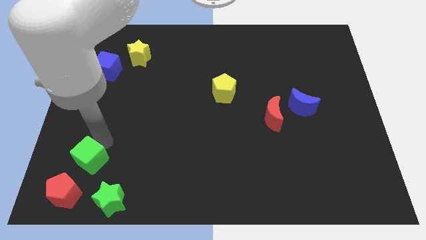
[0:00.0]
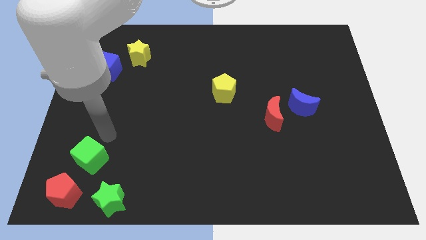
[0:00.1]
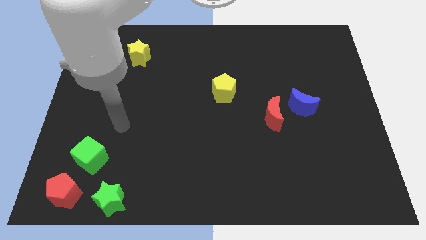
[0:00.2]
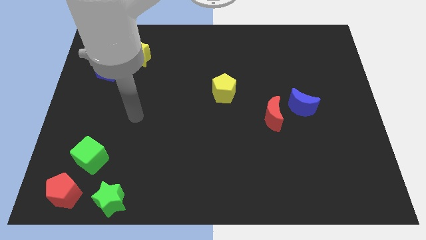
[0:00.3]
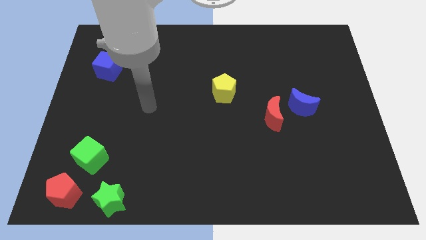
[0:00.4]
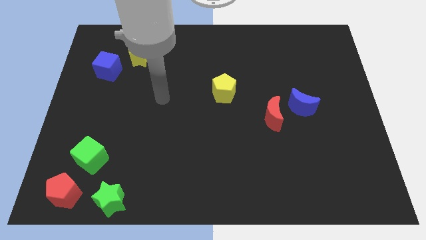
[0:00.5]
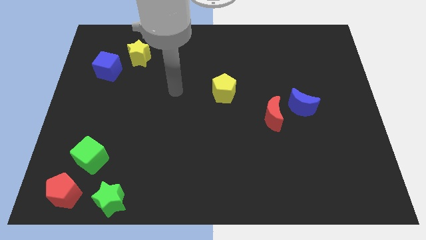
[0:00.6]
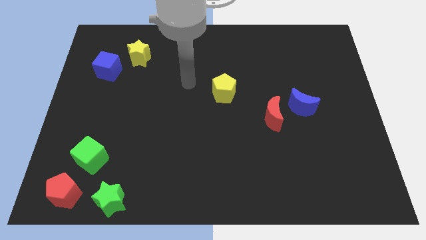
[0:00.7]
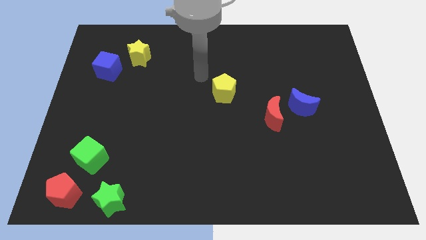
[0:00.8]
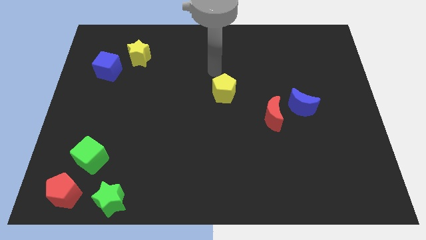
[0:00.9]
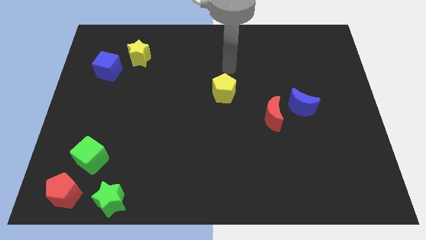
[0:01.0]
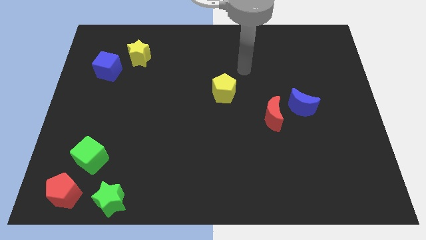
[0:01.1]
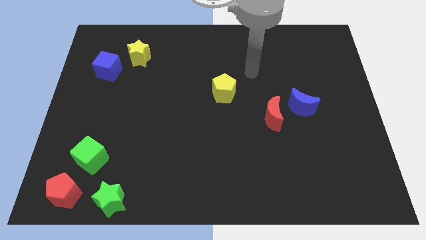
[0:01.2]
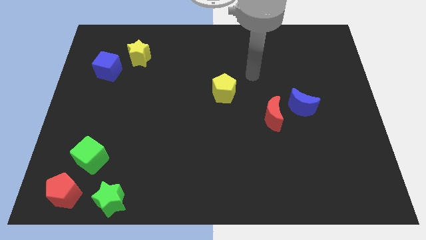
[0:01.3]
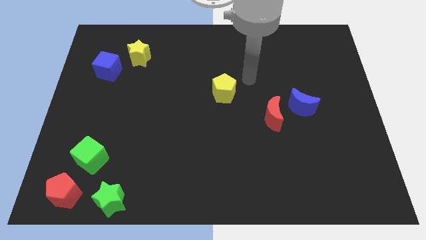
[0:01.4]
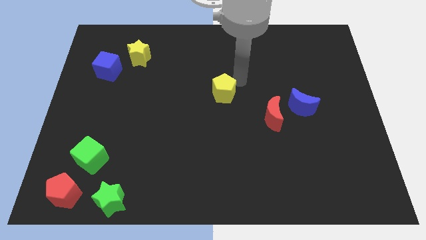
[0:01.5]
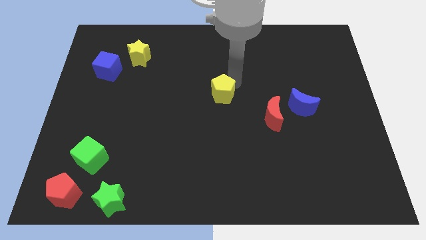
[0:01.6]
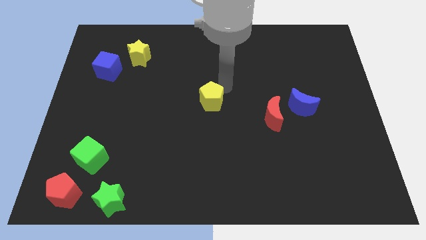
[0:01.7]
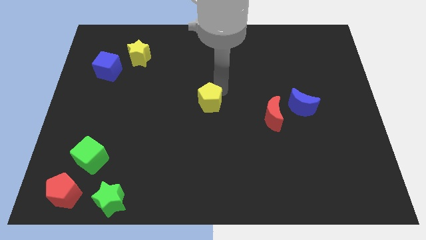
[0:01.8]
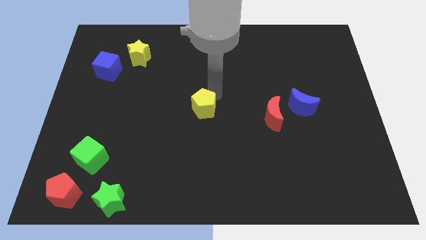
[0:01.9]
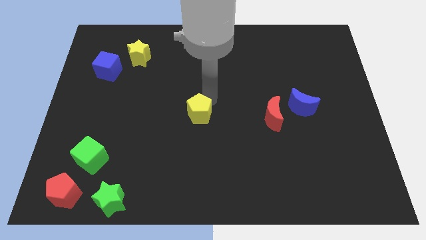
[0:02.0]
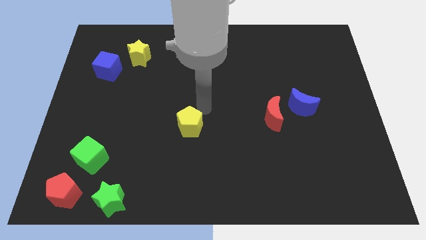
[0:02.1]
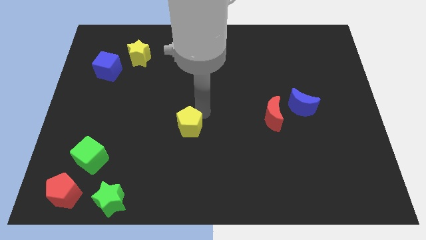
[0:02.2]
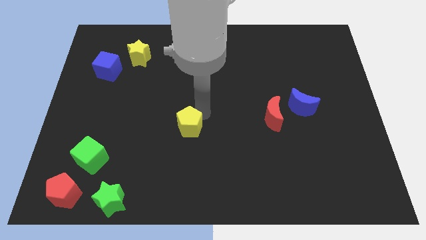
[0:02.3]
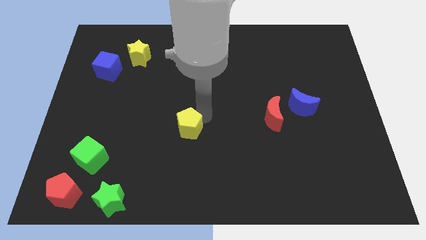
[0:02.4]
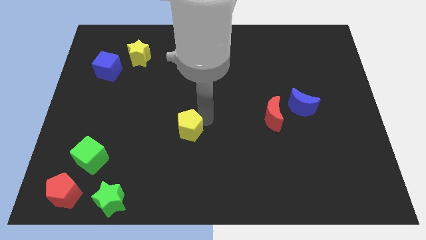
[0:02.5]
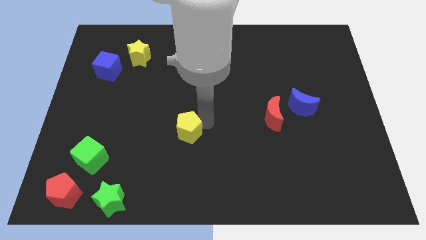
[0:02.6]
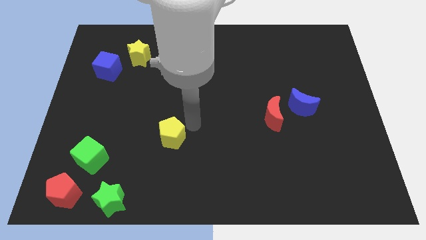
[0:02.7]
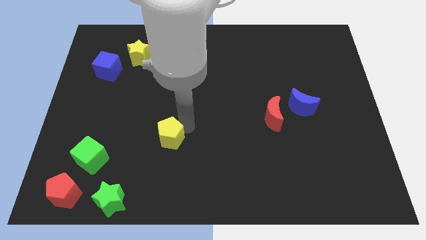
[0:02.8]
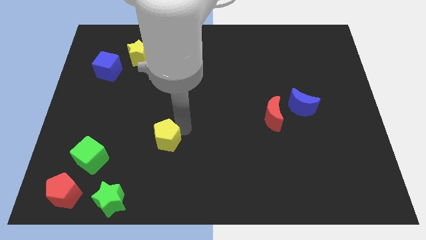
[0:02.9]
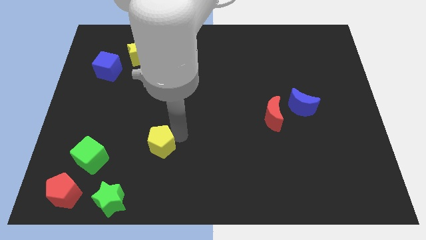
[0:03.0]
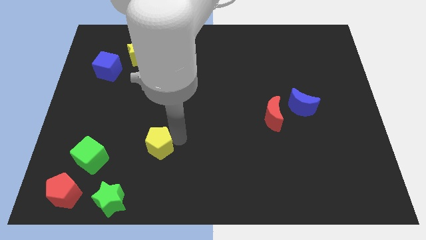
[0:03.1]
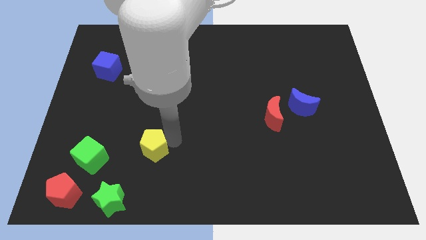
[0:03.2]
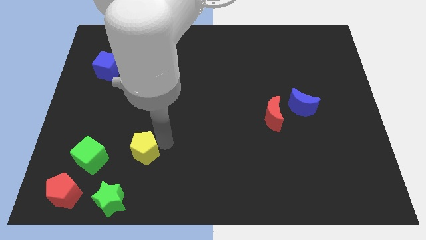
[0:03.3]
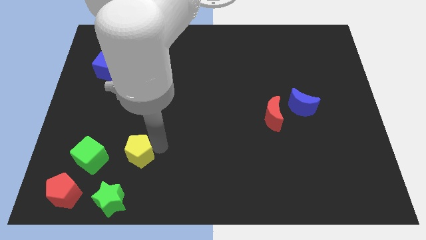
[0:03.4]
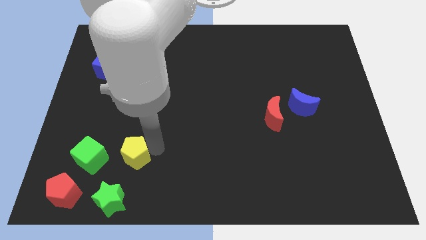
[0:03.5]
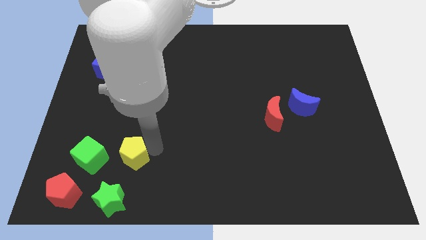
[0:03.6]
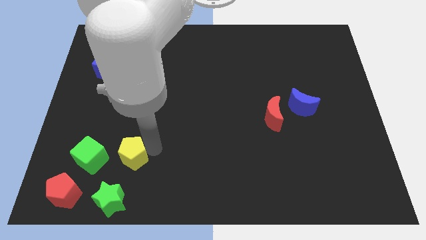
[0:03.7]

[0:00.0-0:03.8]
push the yellow pentagon to the right of the green cube

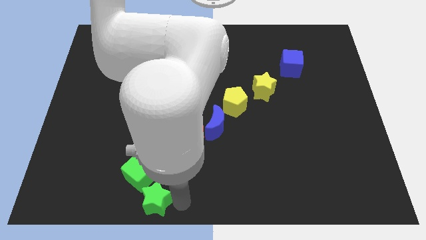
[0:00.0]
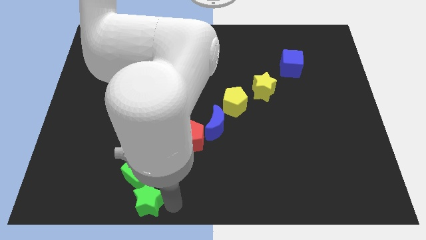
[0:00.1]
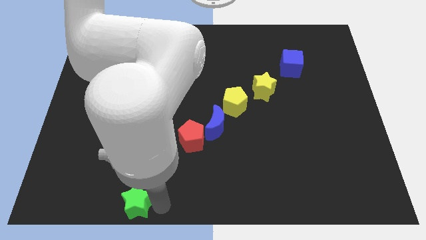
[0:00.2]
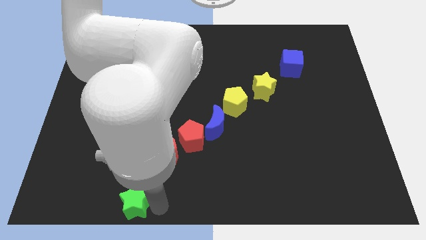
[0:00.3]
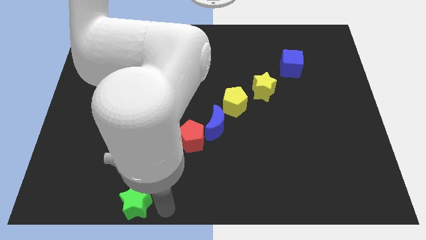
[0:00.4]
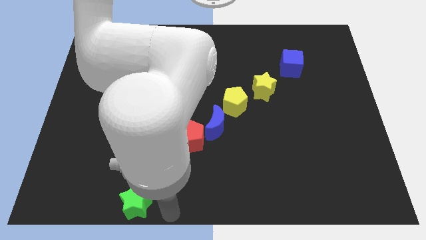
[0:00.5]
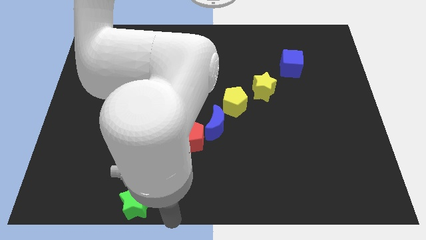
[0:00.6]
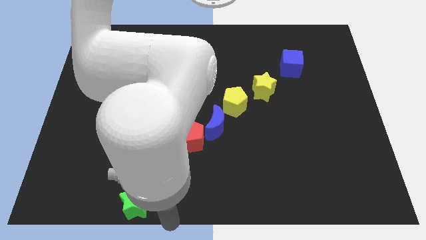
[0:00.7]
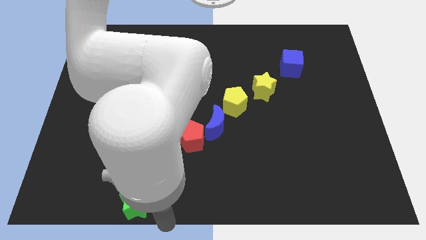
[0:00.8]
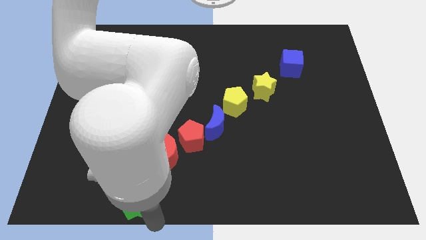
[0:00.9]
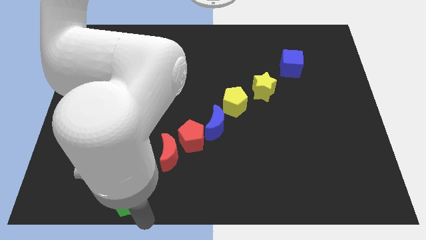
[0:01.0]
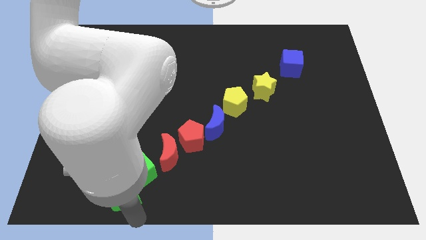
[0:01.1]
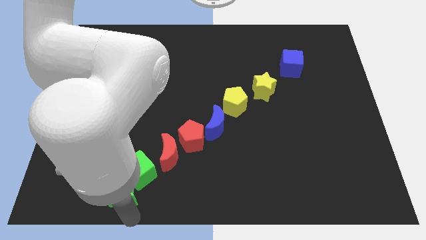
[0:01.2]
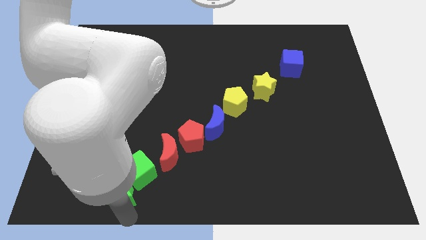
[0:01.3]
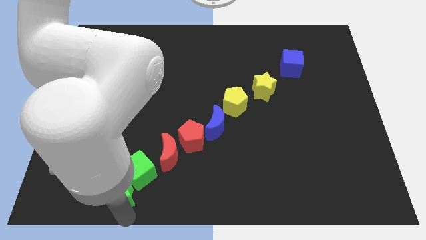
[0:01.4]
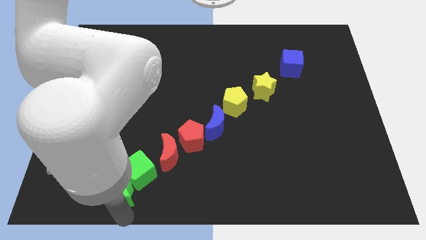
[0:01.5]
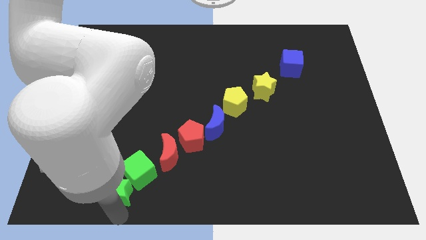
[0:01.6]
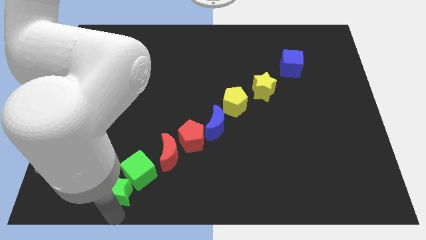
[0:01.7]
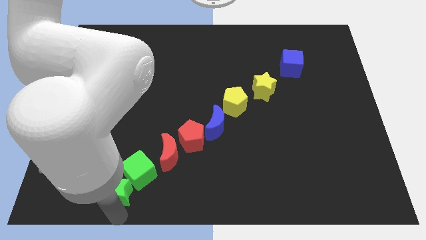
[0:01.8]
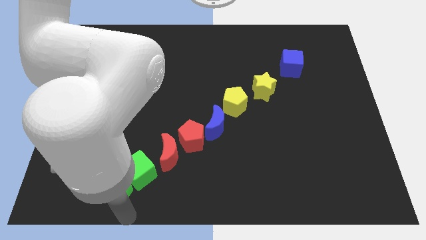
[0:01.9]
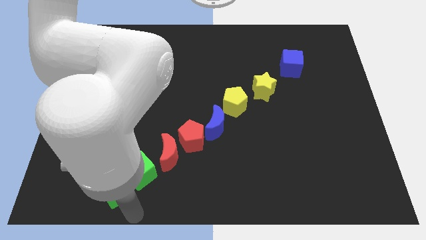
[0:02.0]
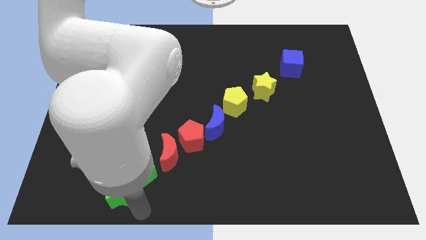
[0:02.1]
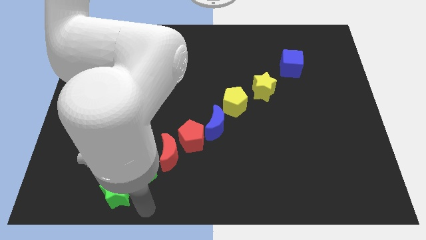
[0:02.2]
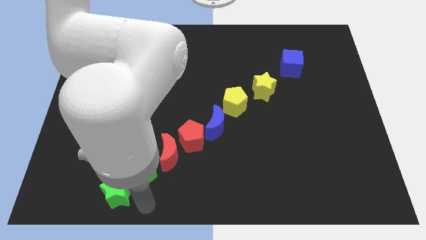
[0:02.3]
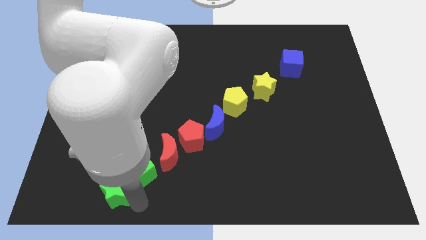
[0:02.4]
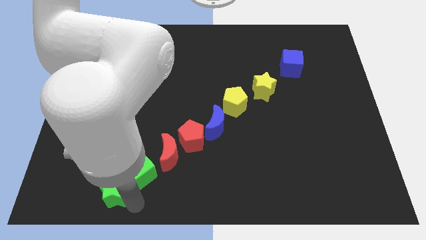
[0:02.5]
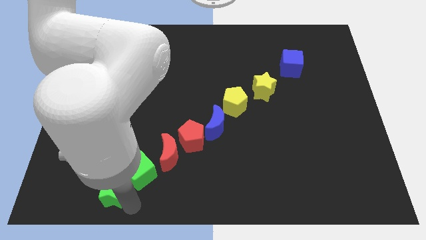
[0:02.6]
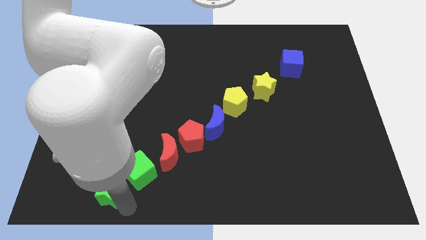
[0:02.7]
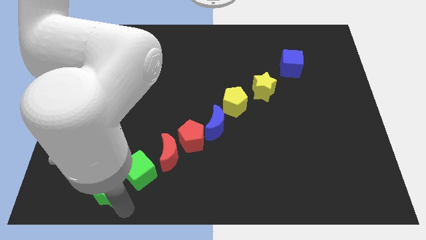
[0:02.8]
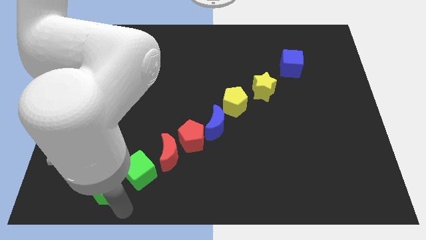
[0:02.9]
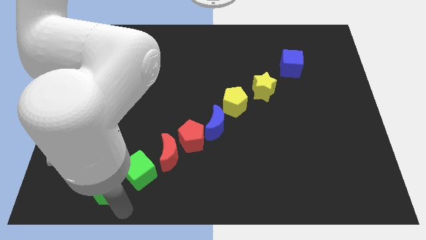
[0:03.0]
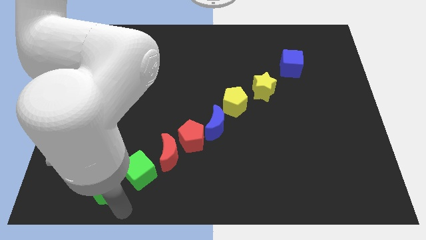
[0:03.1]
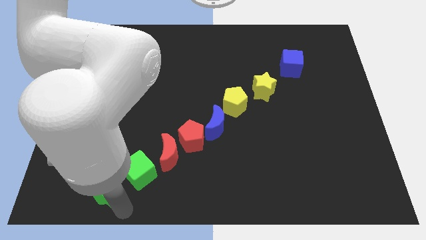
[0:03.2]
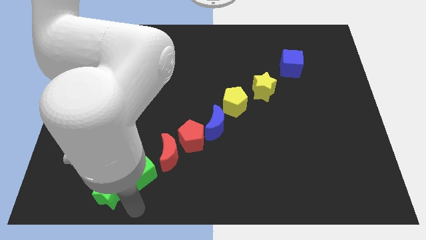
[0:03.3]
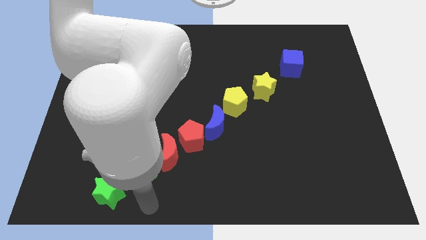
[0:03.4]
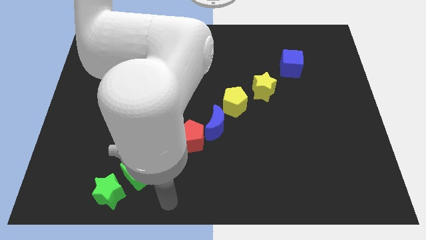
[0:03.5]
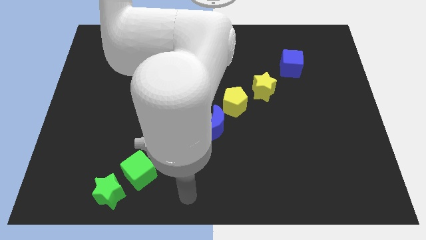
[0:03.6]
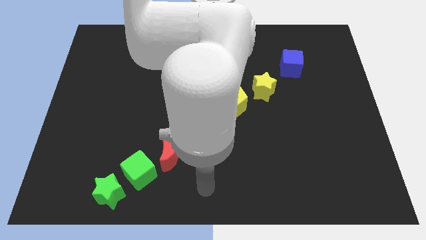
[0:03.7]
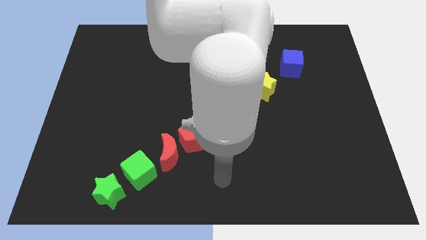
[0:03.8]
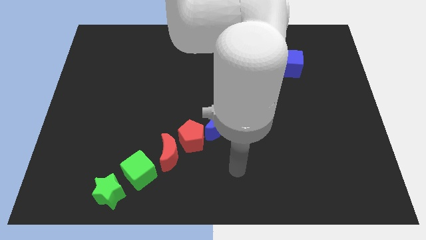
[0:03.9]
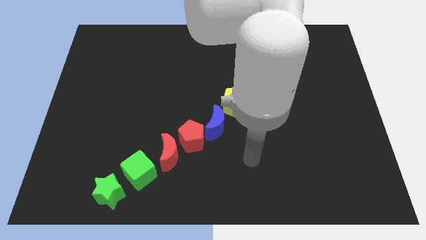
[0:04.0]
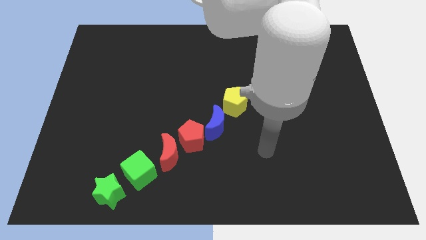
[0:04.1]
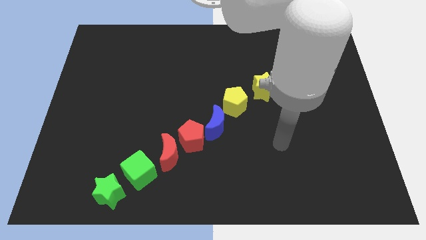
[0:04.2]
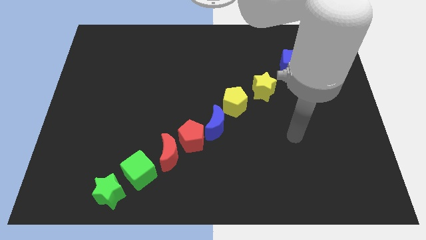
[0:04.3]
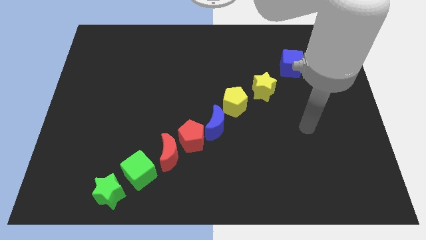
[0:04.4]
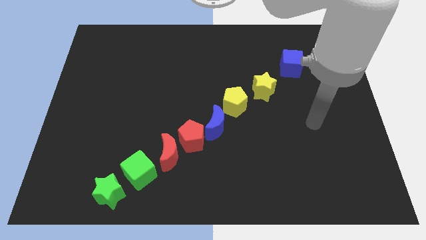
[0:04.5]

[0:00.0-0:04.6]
slightly push the green star to the left

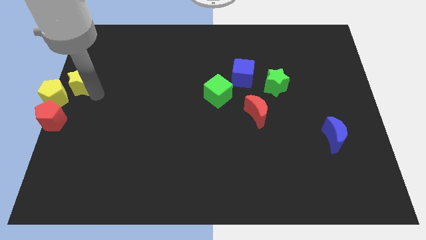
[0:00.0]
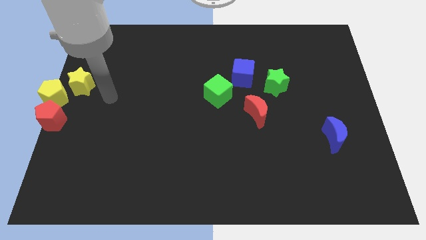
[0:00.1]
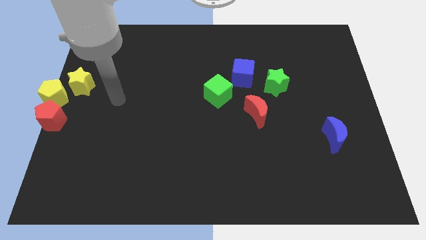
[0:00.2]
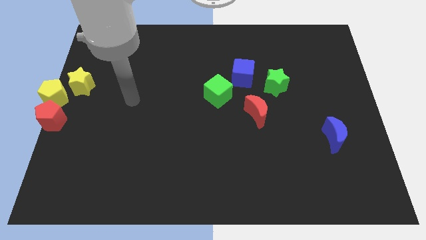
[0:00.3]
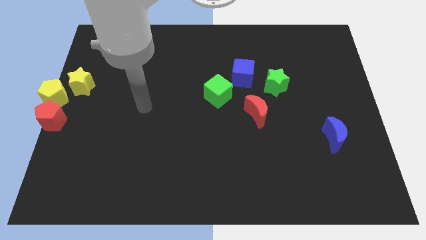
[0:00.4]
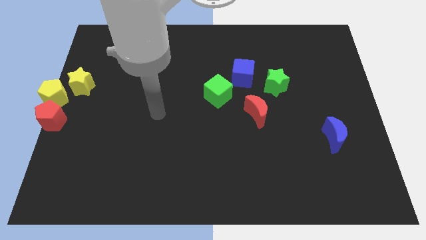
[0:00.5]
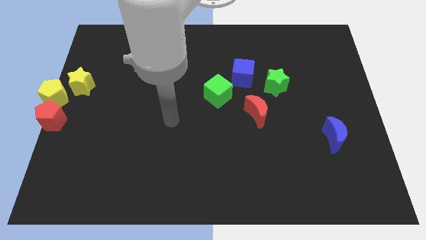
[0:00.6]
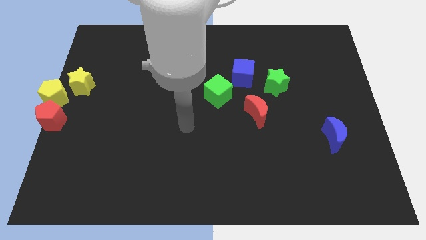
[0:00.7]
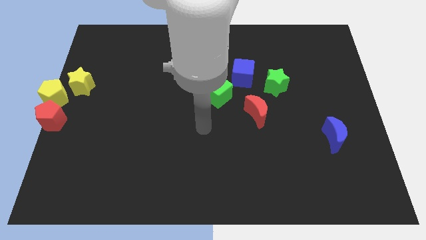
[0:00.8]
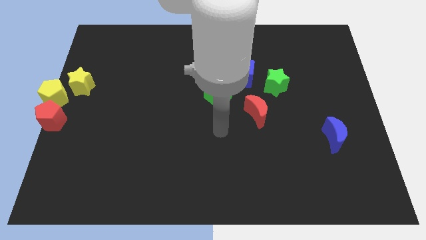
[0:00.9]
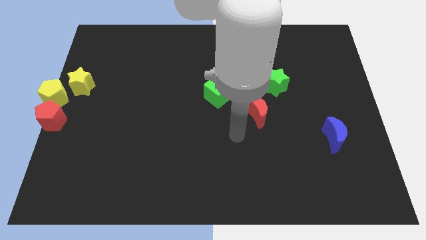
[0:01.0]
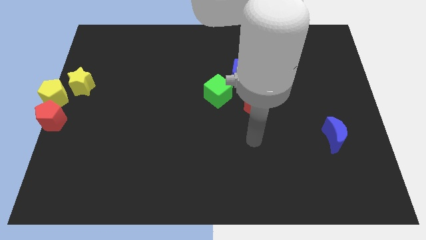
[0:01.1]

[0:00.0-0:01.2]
move your arm towards the right side of the board
